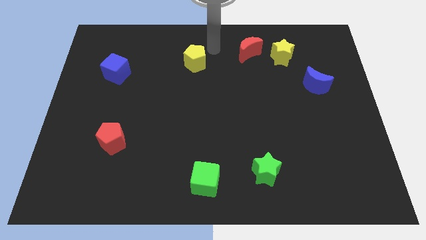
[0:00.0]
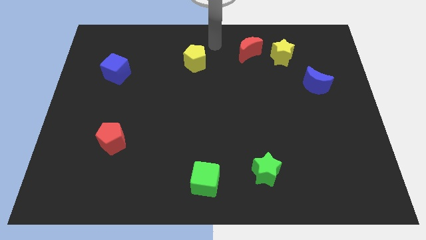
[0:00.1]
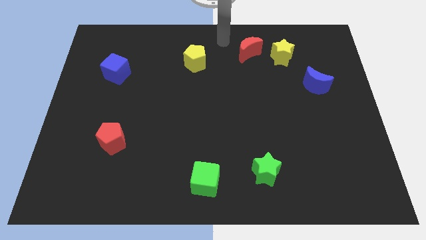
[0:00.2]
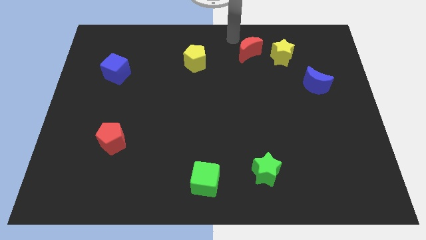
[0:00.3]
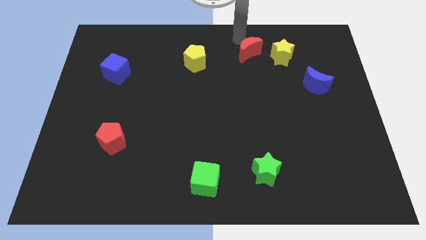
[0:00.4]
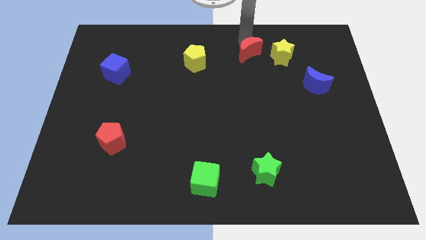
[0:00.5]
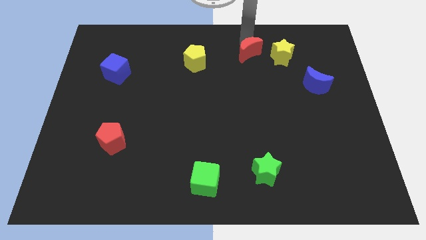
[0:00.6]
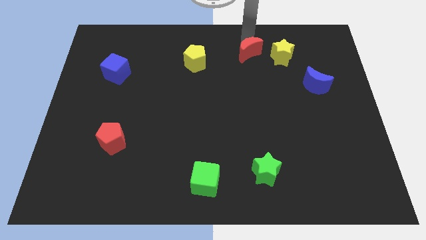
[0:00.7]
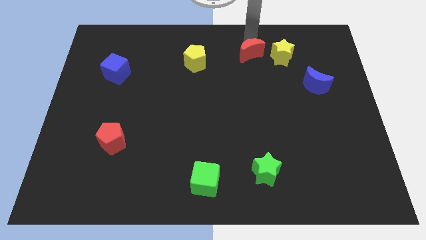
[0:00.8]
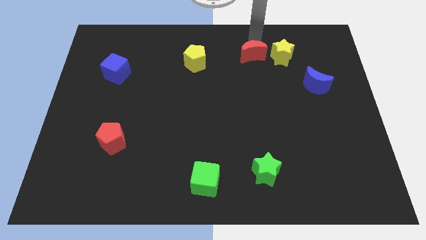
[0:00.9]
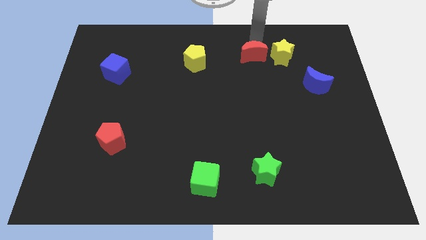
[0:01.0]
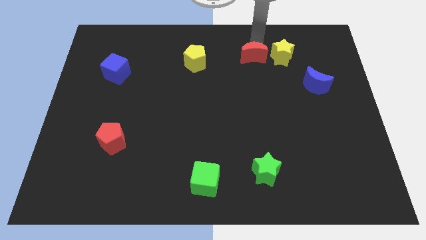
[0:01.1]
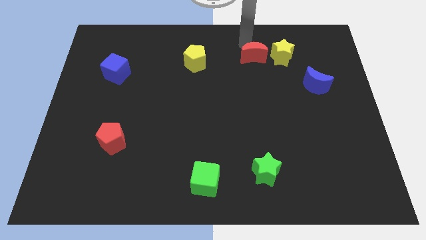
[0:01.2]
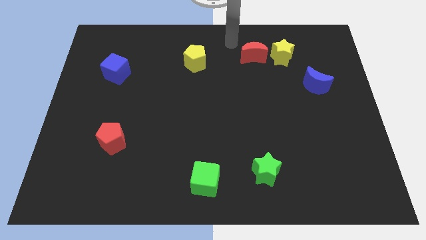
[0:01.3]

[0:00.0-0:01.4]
adjust the red moon to the left side of the yellow star

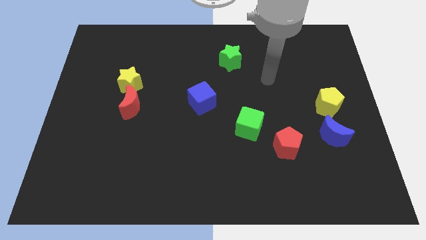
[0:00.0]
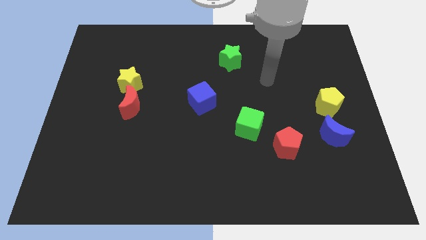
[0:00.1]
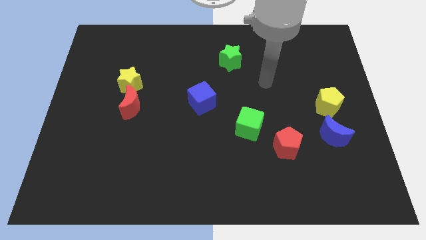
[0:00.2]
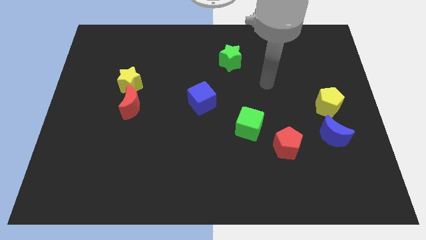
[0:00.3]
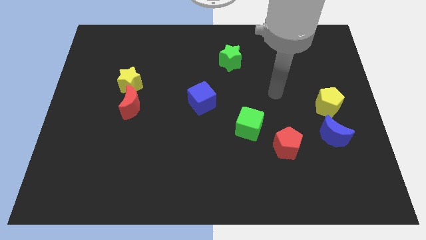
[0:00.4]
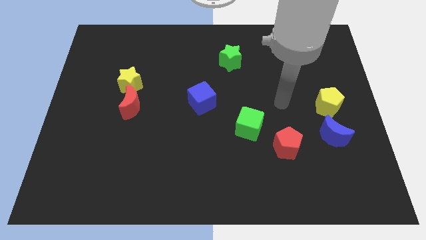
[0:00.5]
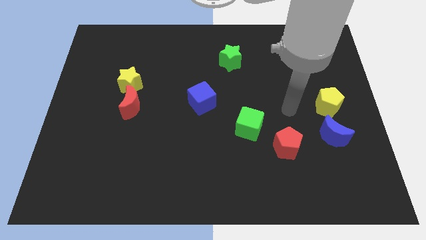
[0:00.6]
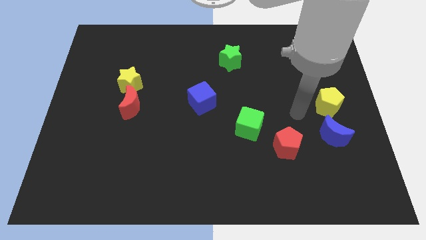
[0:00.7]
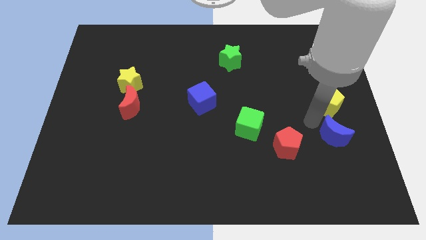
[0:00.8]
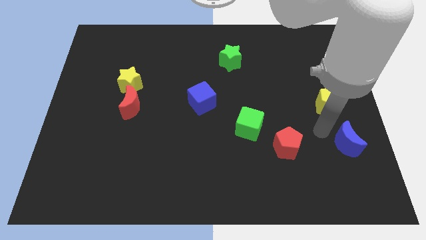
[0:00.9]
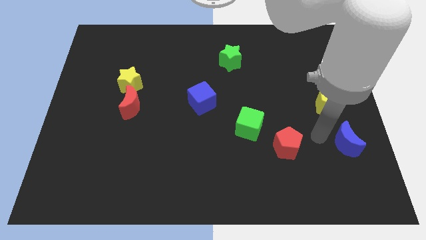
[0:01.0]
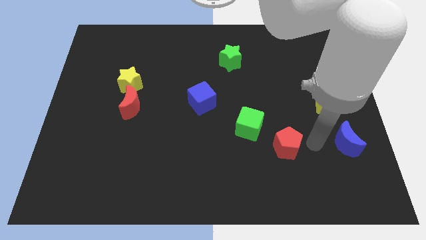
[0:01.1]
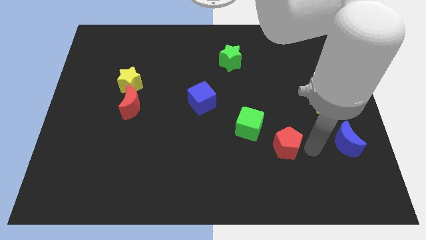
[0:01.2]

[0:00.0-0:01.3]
push the blue crescent slightly towards the right

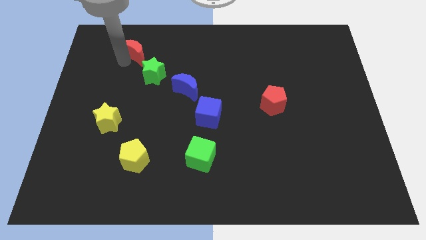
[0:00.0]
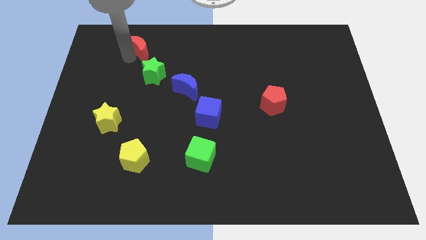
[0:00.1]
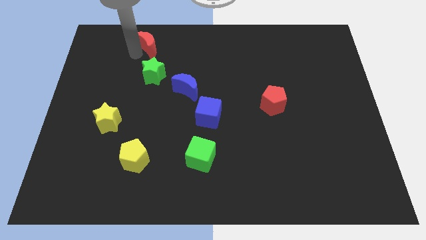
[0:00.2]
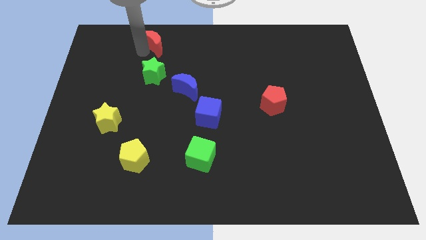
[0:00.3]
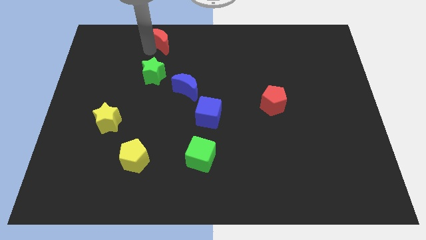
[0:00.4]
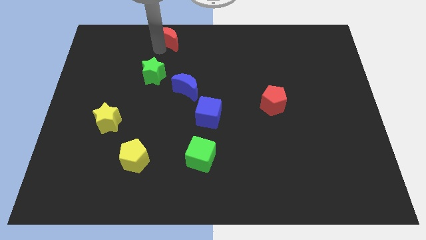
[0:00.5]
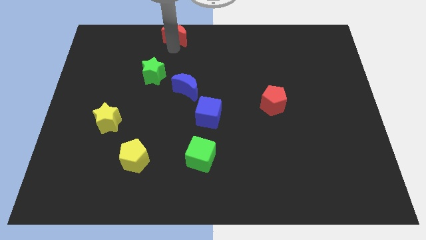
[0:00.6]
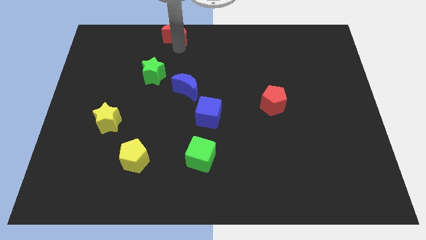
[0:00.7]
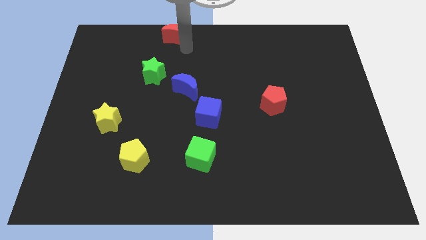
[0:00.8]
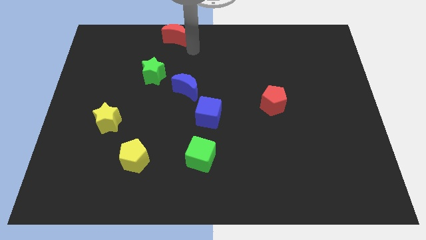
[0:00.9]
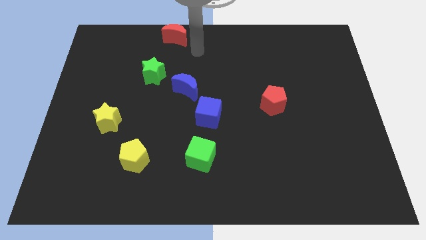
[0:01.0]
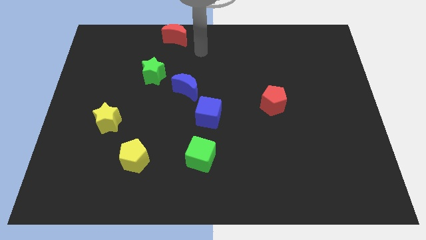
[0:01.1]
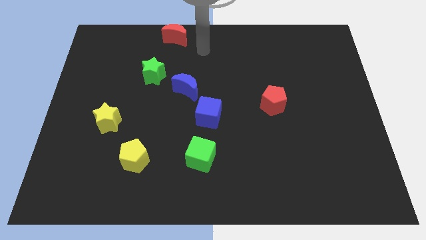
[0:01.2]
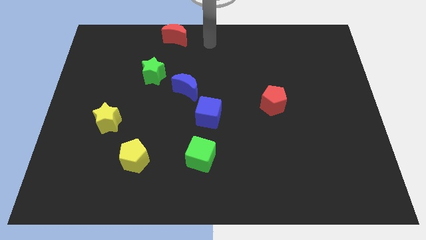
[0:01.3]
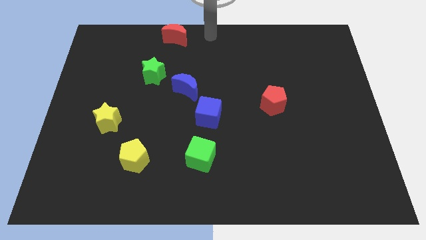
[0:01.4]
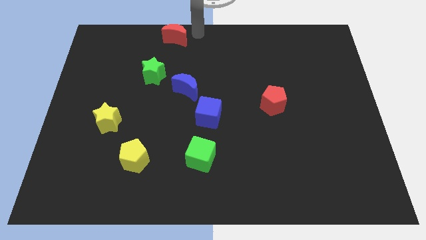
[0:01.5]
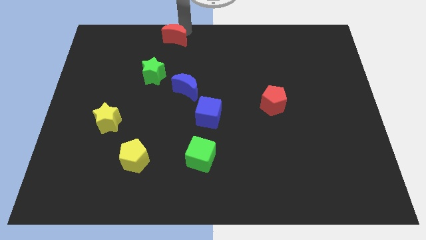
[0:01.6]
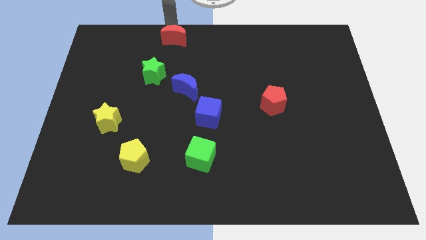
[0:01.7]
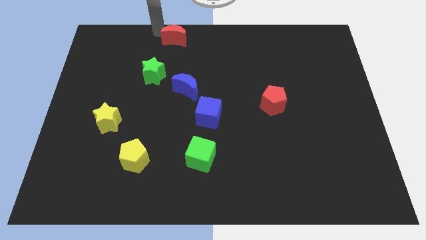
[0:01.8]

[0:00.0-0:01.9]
push the red moon to the top side of the board

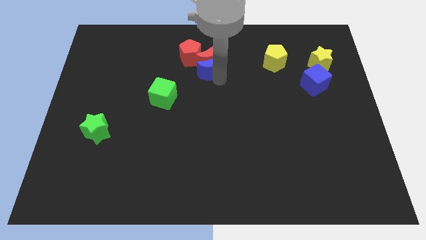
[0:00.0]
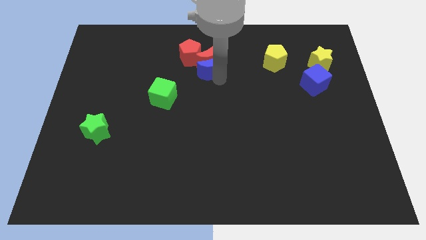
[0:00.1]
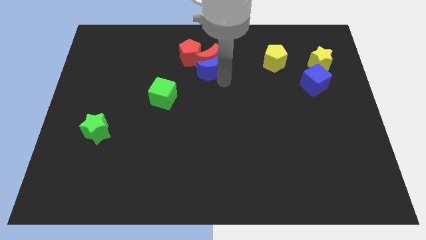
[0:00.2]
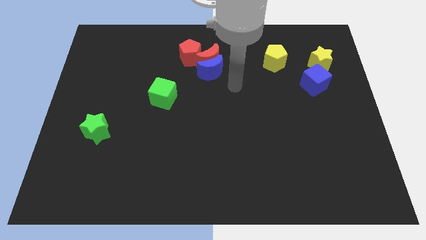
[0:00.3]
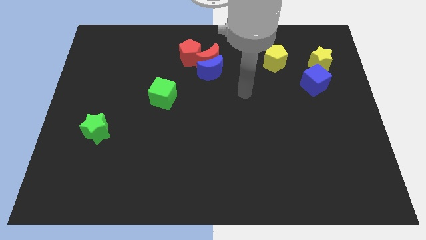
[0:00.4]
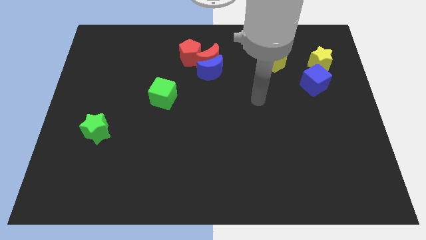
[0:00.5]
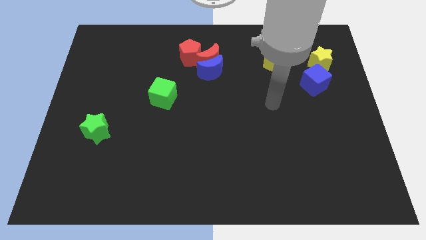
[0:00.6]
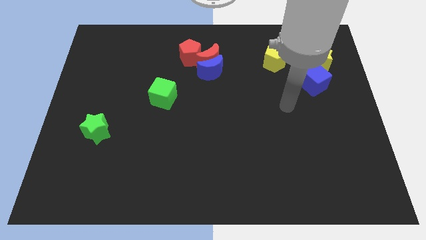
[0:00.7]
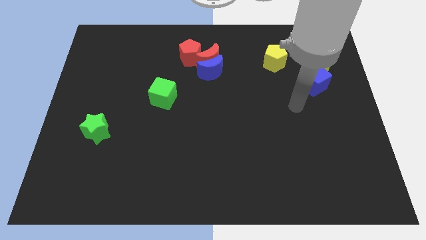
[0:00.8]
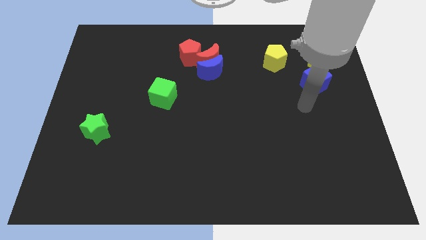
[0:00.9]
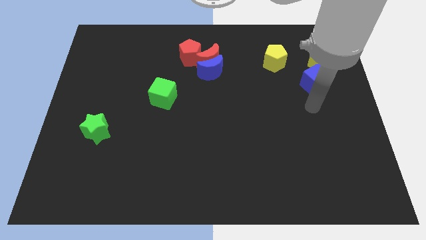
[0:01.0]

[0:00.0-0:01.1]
move your hand away from the blue crescent

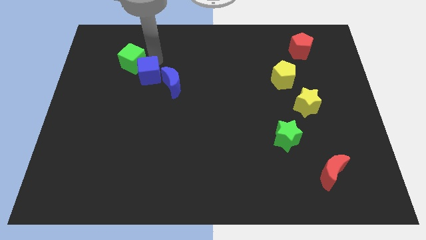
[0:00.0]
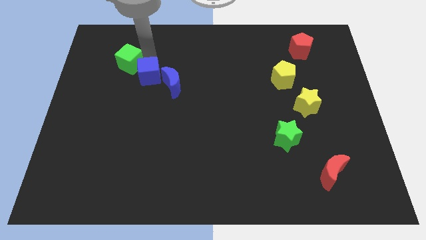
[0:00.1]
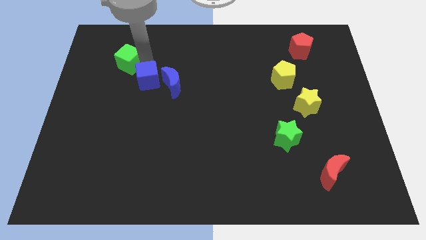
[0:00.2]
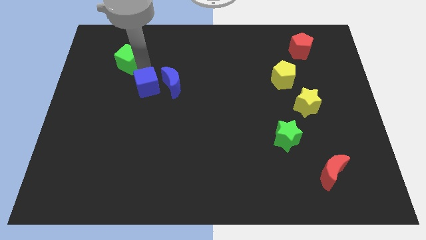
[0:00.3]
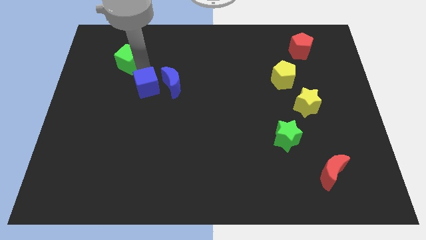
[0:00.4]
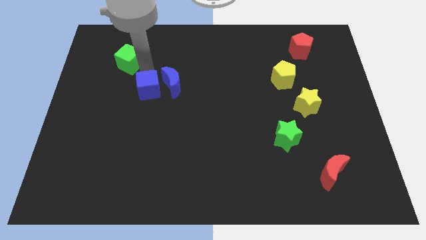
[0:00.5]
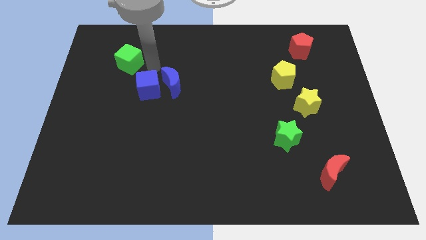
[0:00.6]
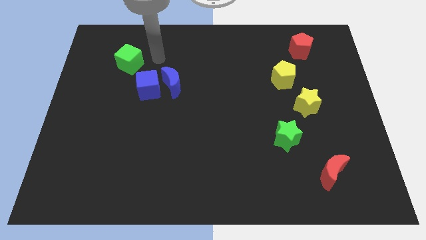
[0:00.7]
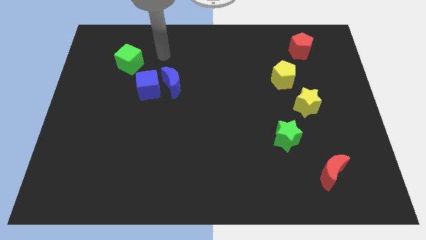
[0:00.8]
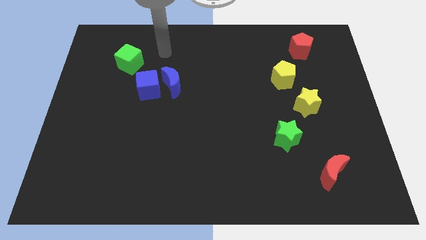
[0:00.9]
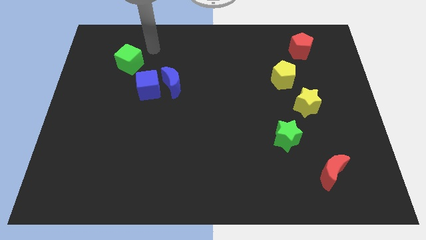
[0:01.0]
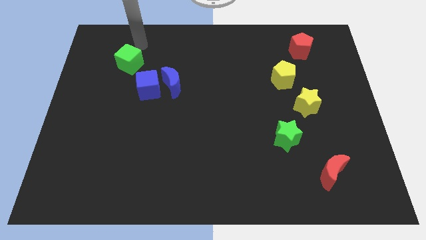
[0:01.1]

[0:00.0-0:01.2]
push the blue cube slightly to the bottom

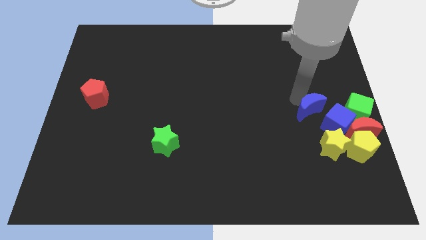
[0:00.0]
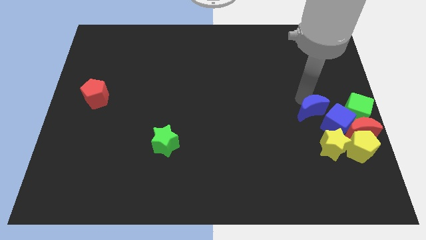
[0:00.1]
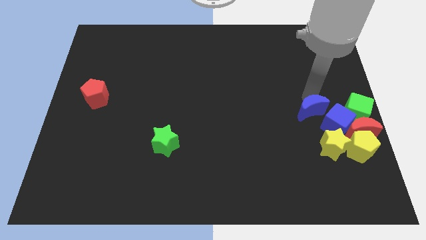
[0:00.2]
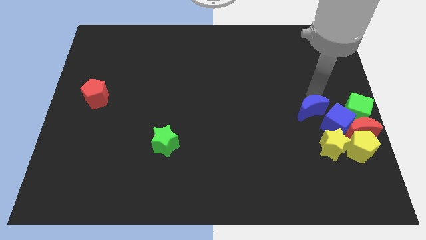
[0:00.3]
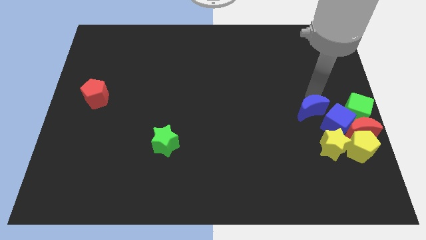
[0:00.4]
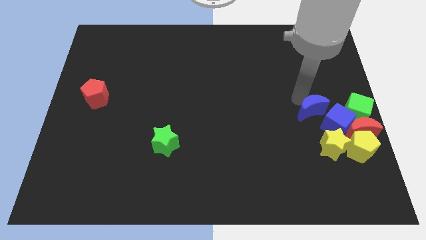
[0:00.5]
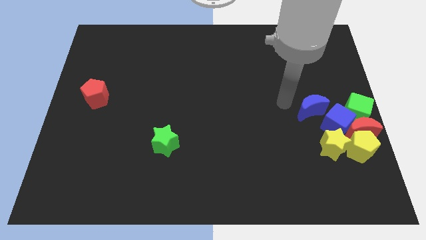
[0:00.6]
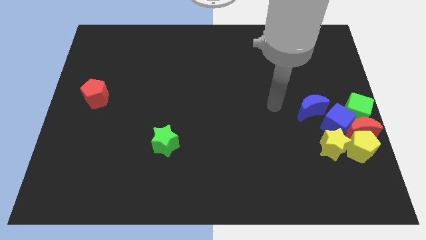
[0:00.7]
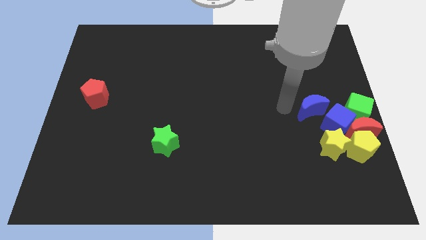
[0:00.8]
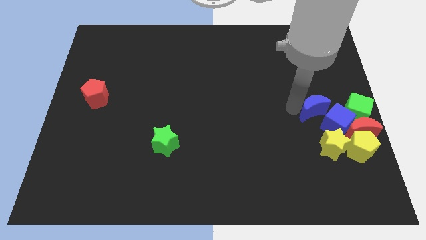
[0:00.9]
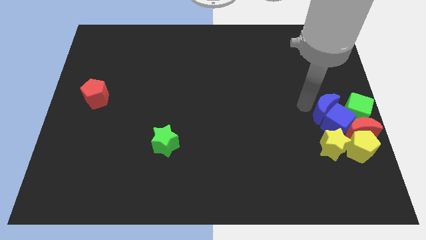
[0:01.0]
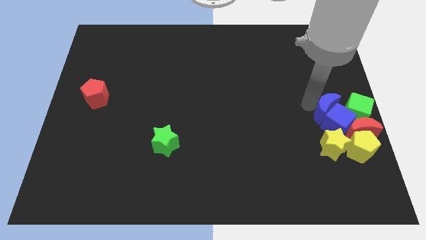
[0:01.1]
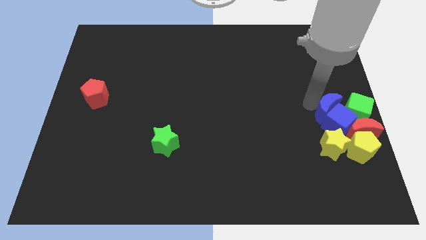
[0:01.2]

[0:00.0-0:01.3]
push the blue moon into the blue cube

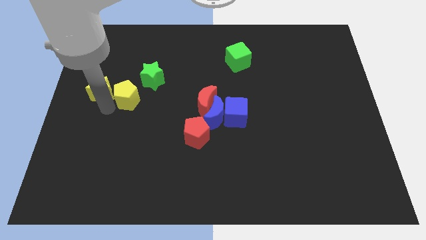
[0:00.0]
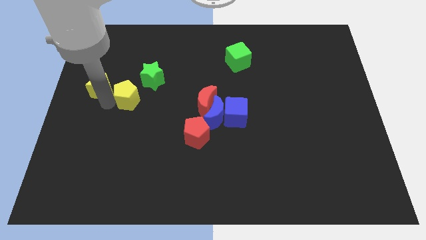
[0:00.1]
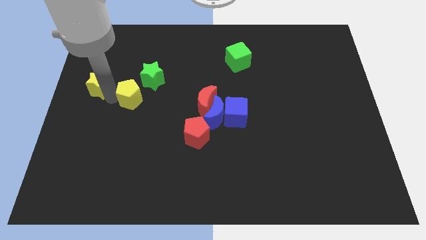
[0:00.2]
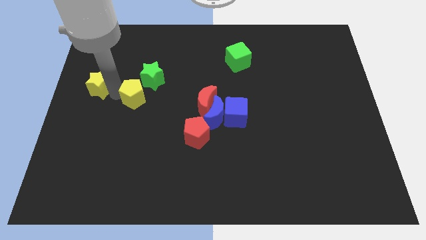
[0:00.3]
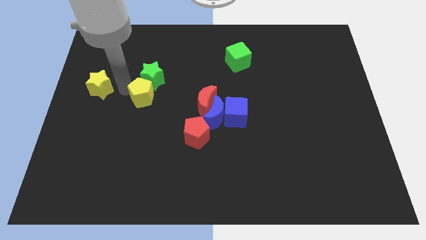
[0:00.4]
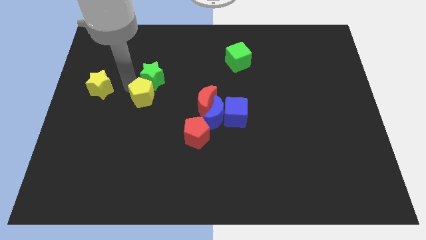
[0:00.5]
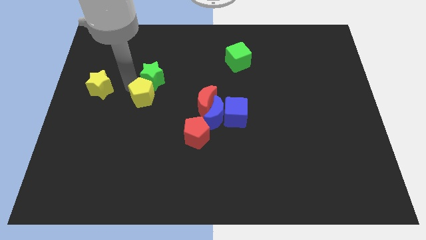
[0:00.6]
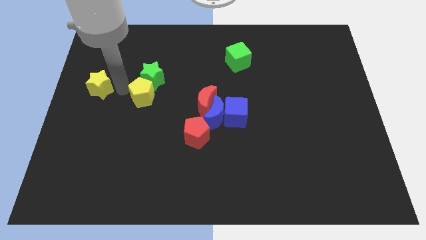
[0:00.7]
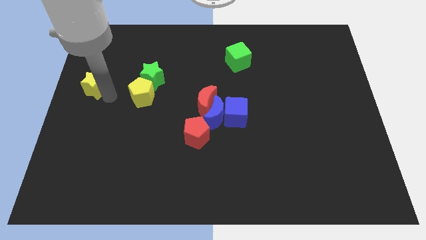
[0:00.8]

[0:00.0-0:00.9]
adjust the yellow pentagon below the green star
